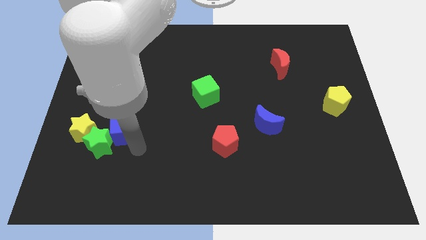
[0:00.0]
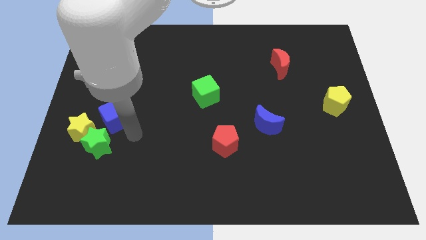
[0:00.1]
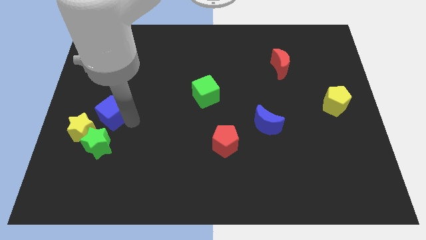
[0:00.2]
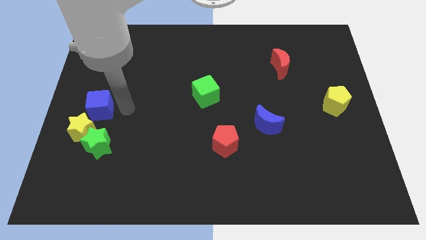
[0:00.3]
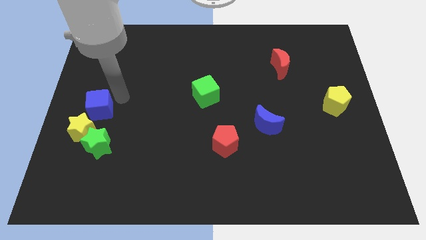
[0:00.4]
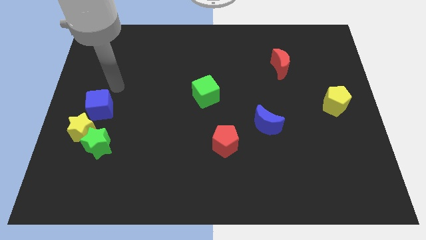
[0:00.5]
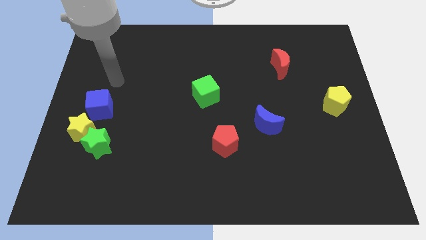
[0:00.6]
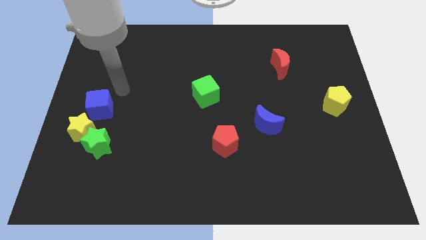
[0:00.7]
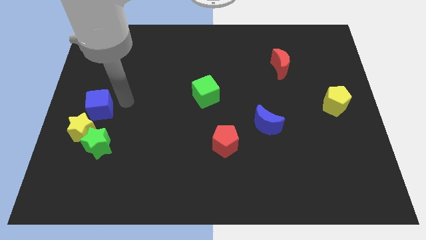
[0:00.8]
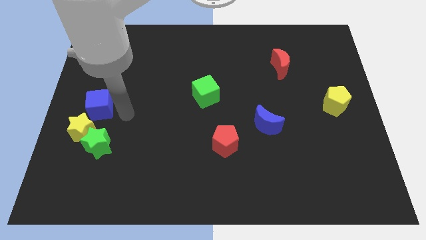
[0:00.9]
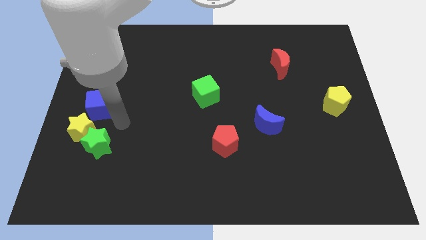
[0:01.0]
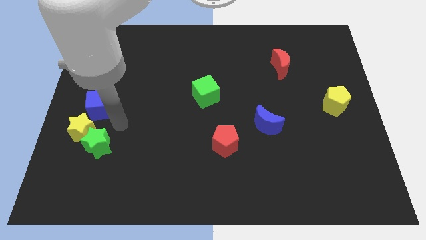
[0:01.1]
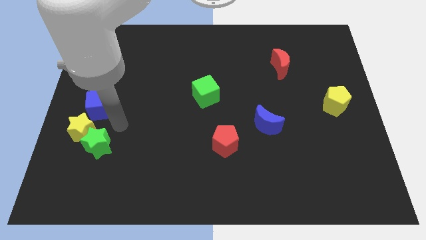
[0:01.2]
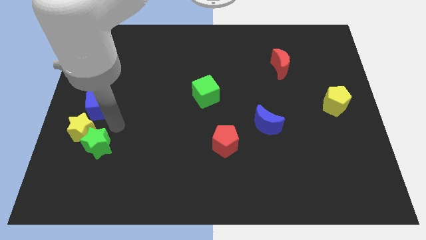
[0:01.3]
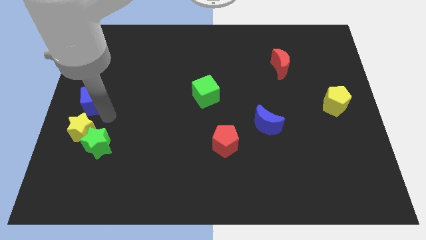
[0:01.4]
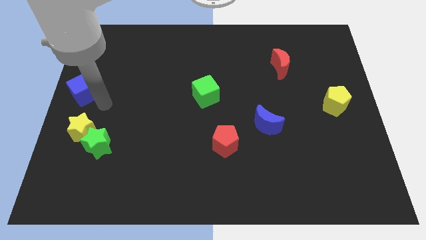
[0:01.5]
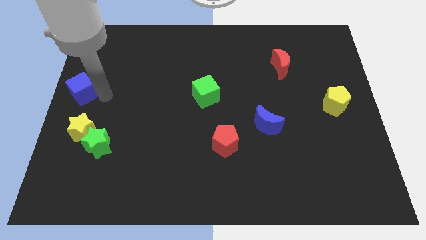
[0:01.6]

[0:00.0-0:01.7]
move the blue cube to the top of the yellow star

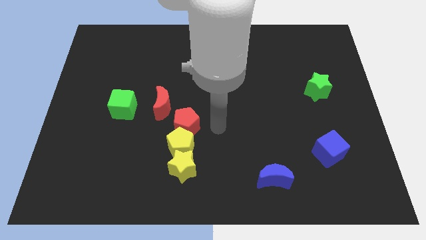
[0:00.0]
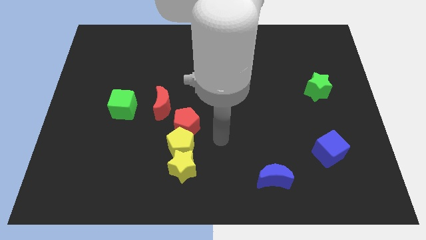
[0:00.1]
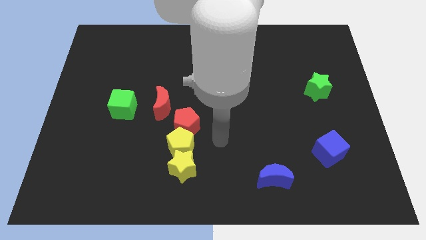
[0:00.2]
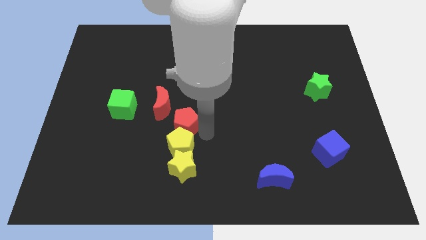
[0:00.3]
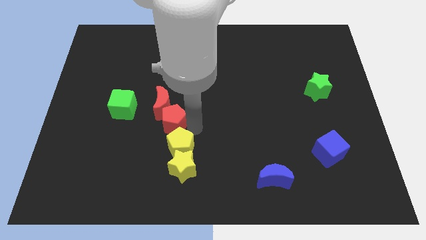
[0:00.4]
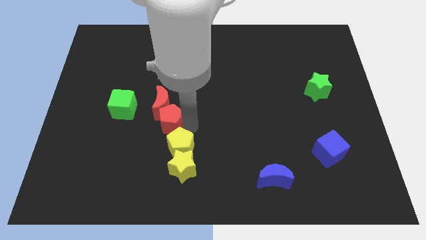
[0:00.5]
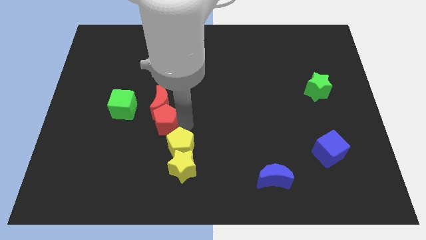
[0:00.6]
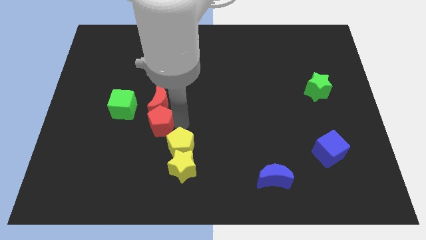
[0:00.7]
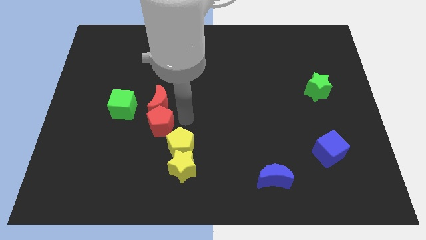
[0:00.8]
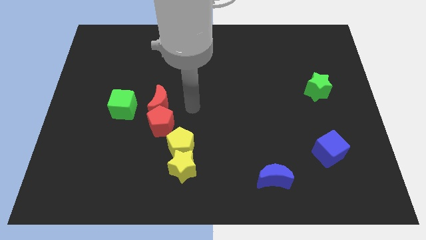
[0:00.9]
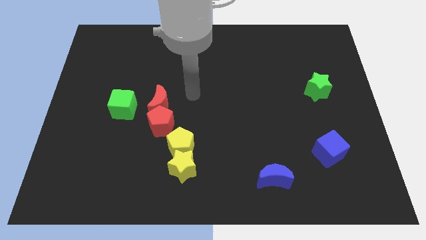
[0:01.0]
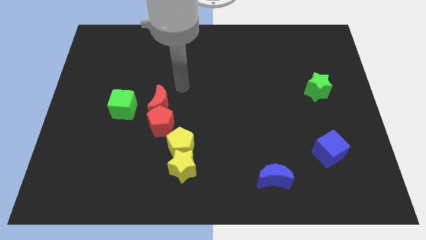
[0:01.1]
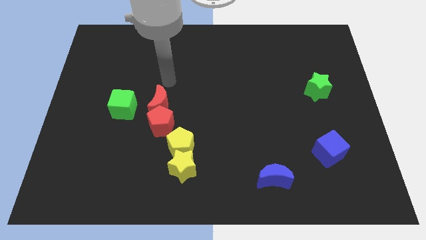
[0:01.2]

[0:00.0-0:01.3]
push the red pentagon towards the bottom of the red crescent

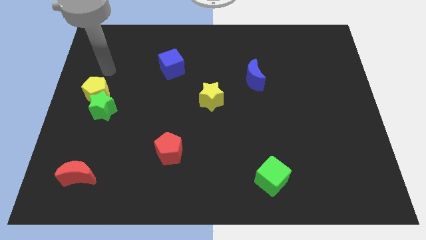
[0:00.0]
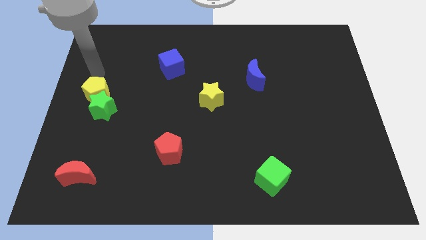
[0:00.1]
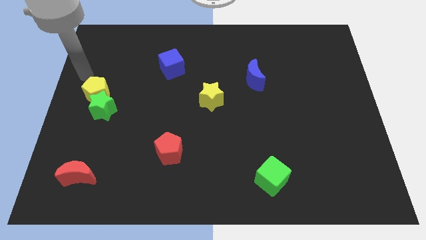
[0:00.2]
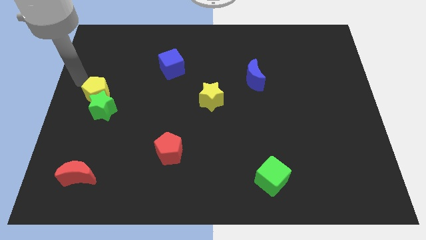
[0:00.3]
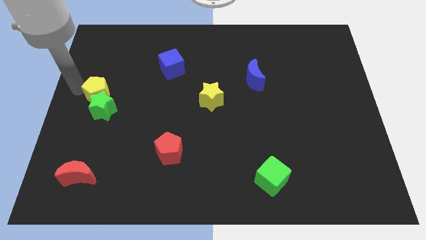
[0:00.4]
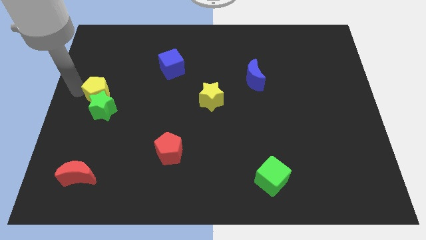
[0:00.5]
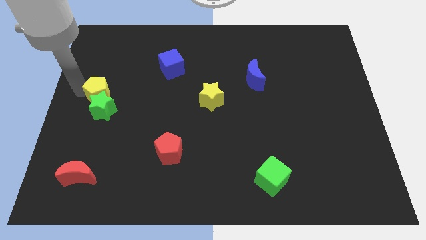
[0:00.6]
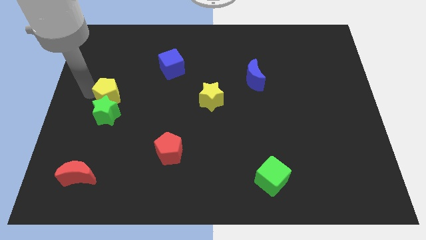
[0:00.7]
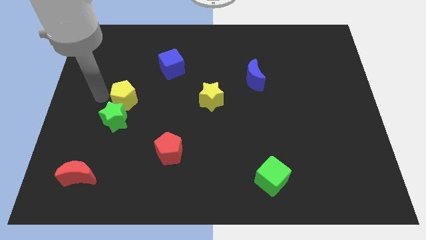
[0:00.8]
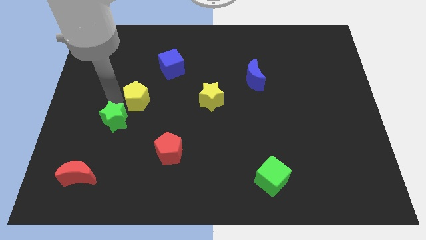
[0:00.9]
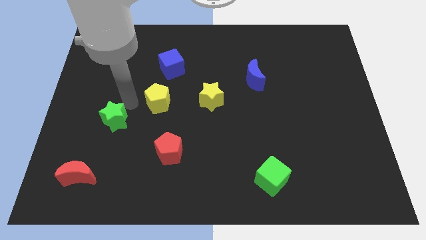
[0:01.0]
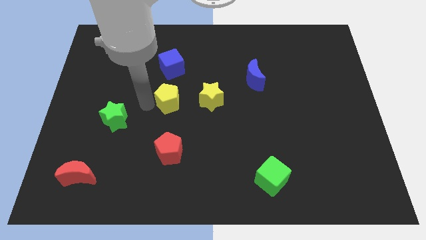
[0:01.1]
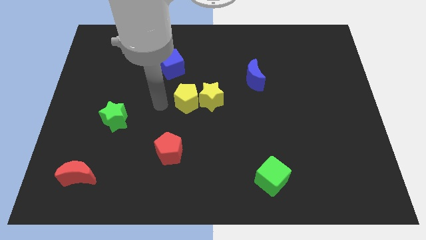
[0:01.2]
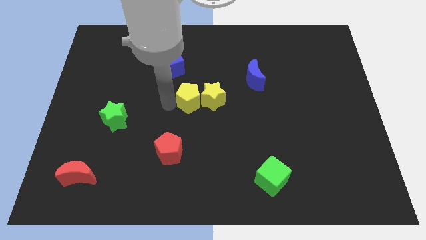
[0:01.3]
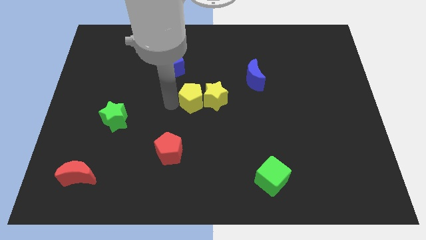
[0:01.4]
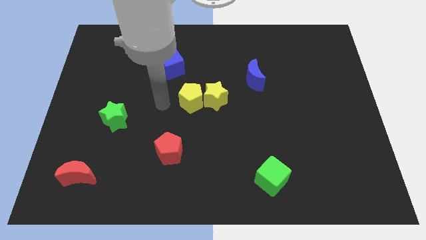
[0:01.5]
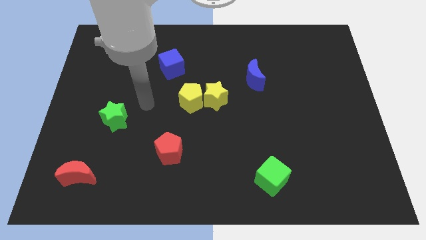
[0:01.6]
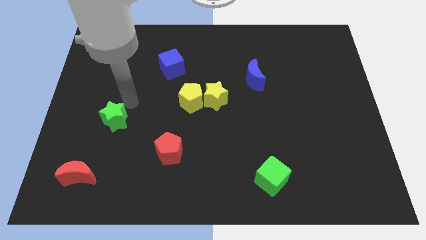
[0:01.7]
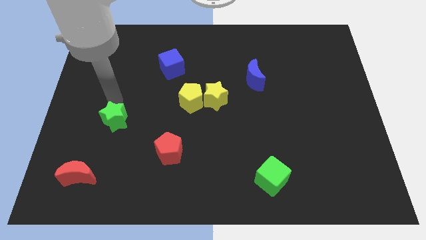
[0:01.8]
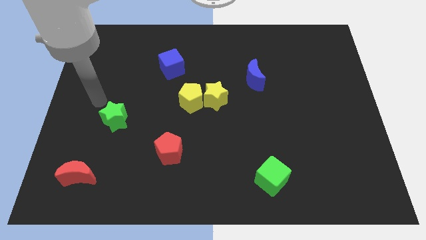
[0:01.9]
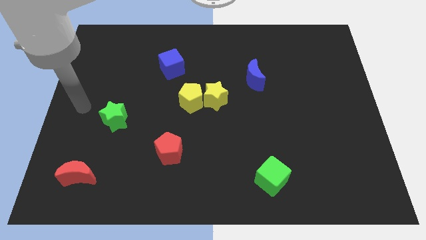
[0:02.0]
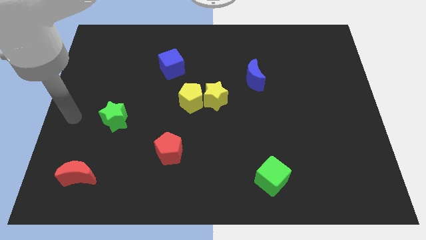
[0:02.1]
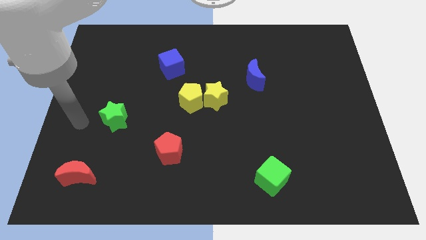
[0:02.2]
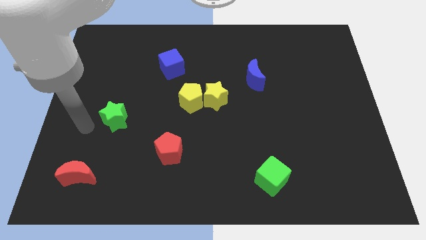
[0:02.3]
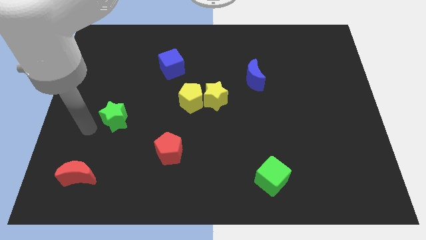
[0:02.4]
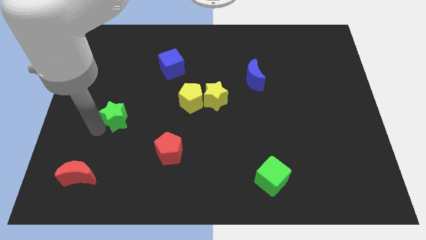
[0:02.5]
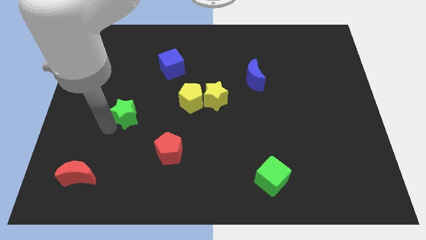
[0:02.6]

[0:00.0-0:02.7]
move yellow pentagon left yellow star

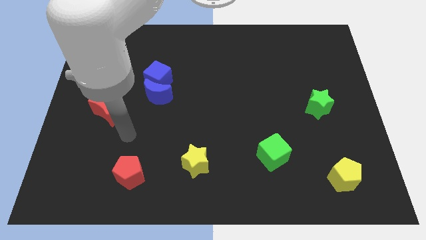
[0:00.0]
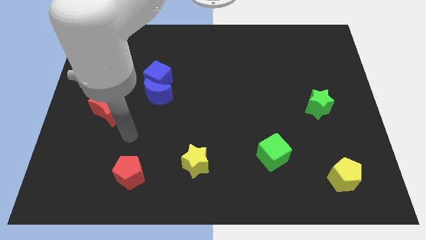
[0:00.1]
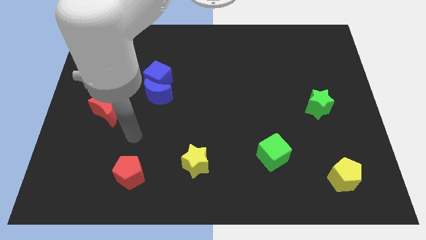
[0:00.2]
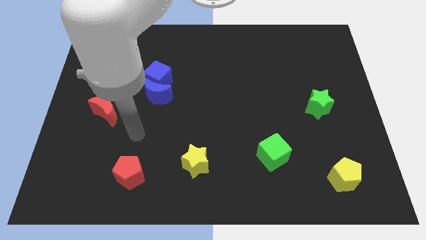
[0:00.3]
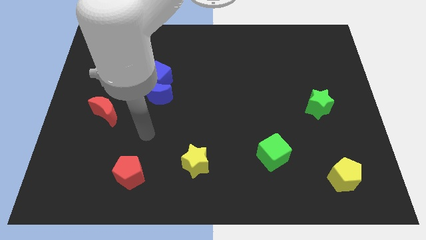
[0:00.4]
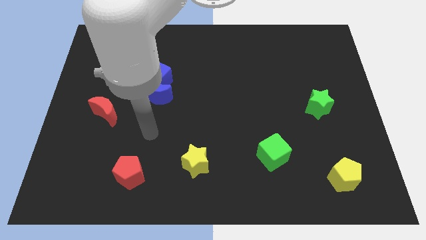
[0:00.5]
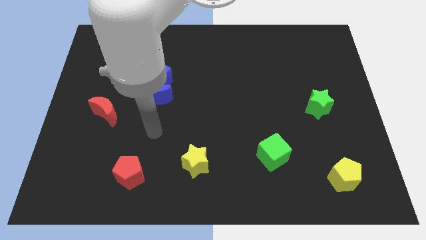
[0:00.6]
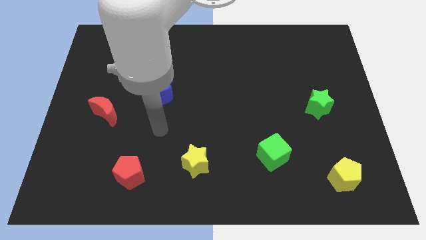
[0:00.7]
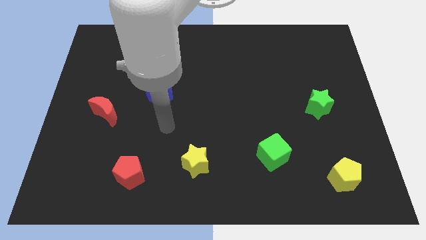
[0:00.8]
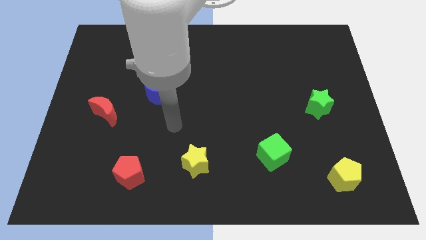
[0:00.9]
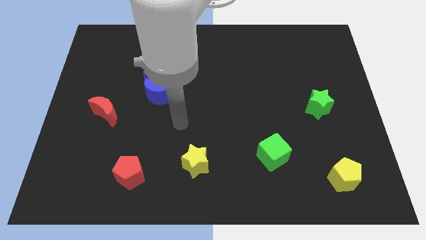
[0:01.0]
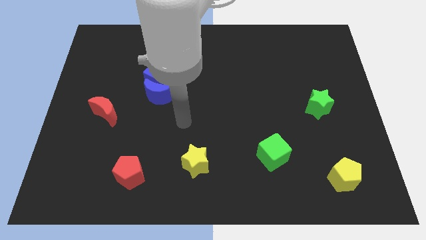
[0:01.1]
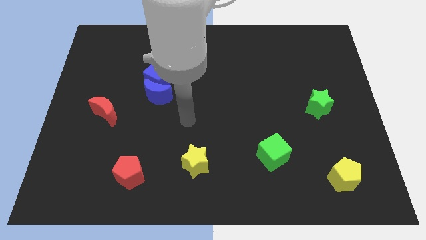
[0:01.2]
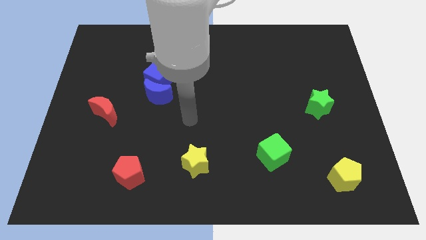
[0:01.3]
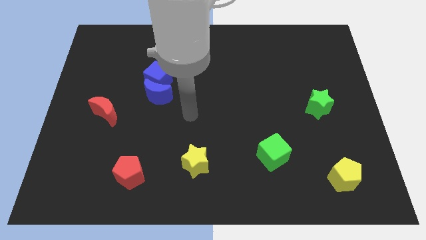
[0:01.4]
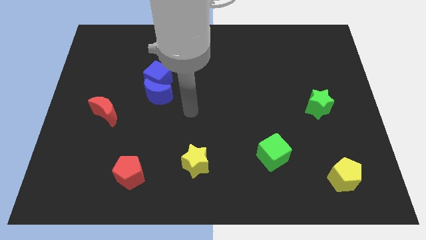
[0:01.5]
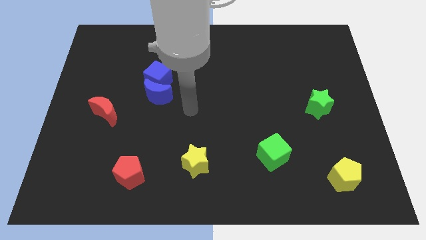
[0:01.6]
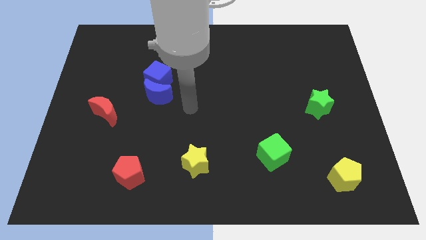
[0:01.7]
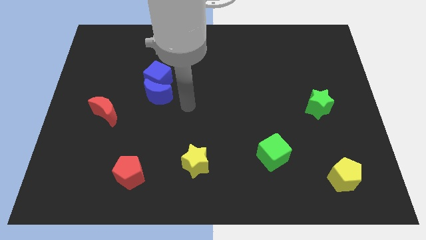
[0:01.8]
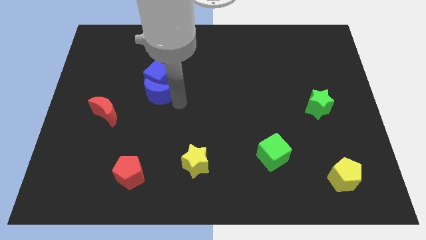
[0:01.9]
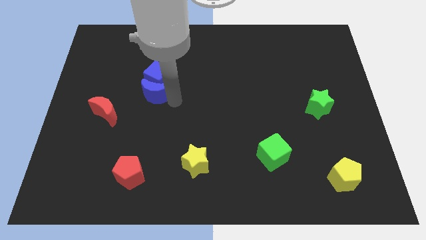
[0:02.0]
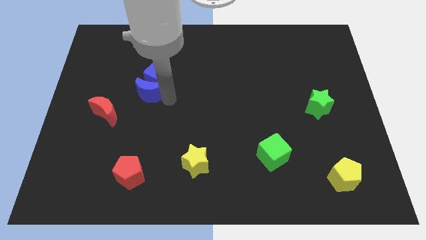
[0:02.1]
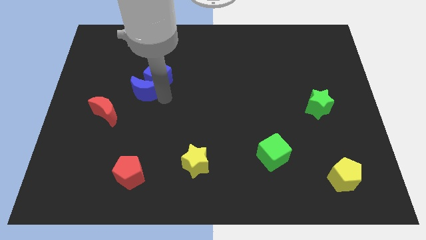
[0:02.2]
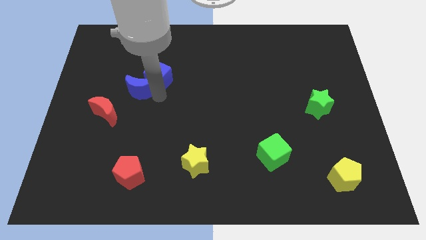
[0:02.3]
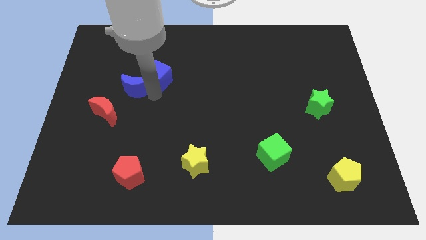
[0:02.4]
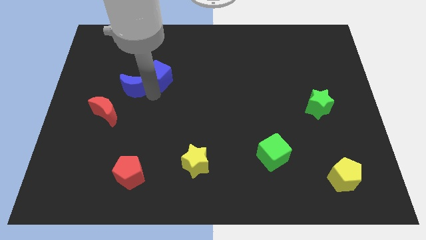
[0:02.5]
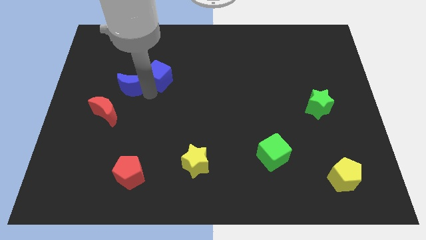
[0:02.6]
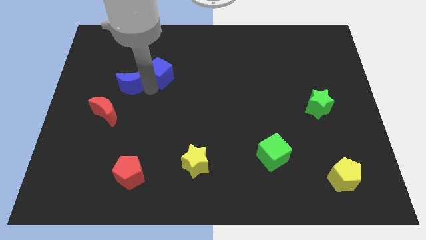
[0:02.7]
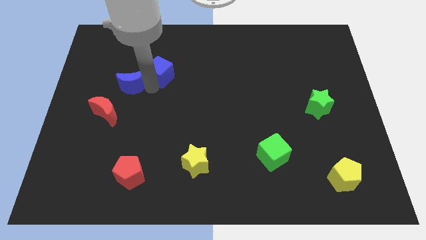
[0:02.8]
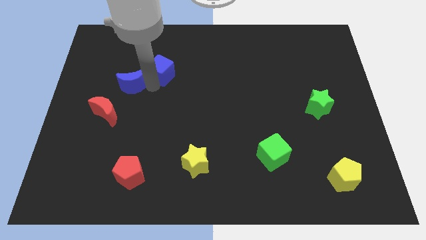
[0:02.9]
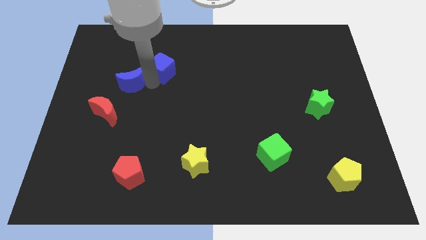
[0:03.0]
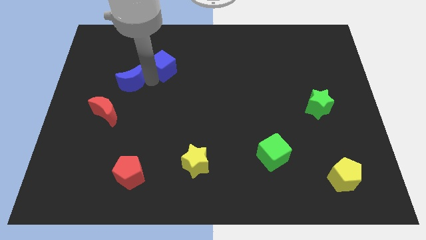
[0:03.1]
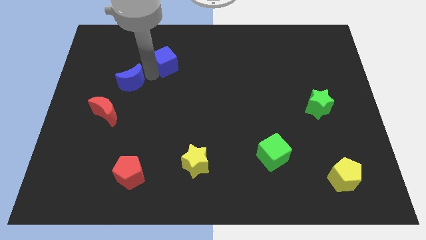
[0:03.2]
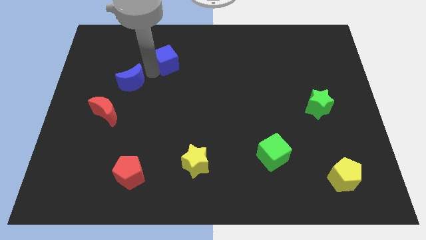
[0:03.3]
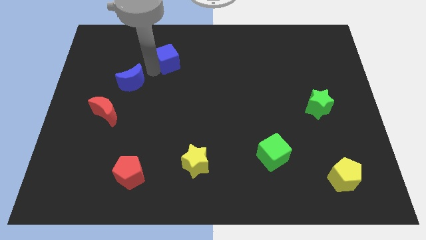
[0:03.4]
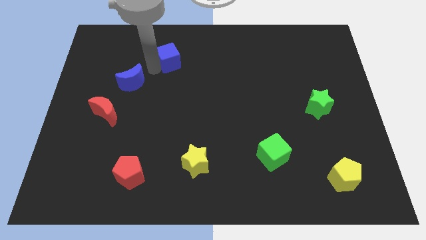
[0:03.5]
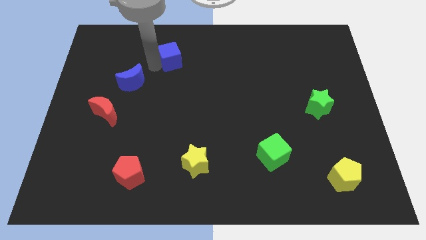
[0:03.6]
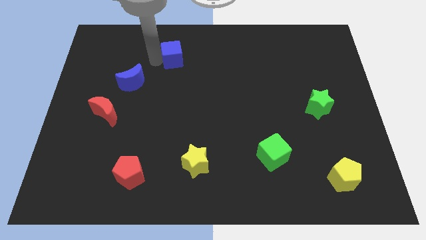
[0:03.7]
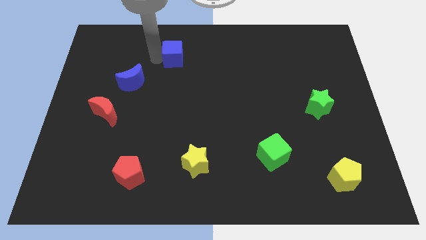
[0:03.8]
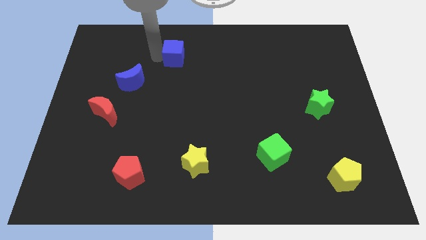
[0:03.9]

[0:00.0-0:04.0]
separate the blue cube from the blue crescent
